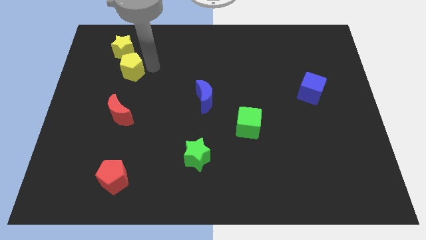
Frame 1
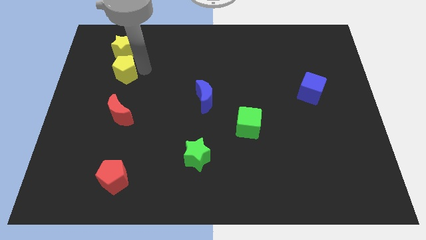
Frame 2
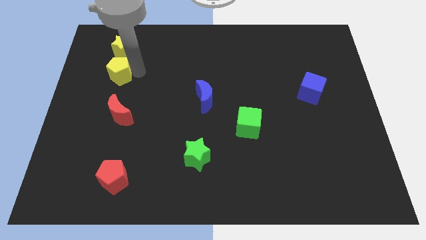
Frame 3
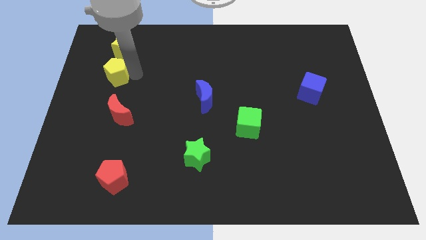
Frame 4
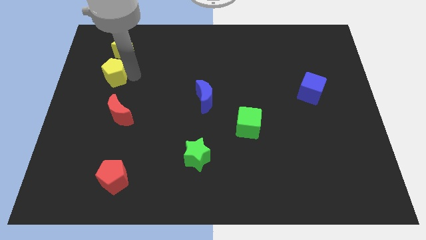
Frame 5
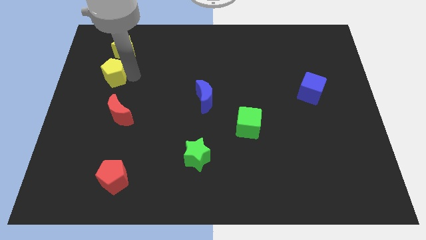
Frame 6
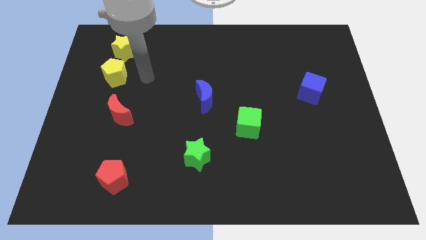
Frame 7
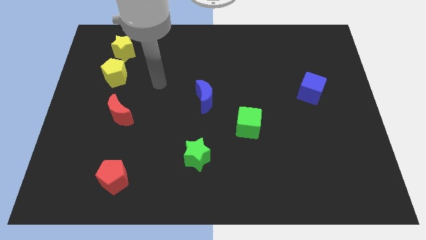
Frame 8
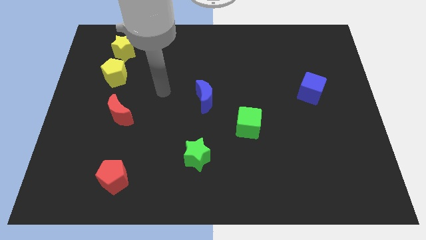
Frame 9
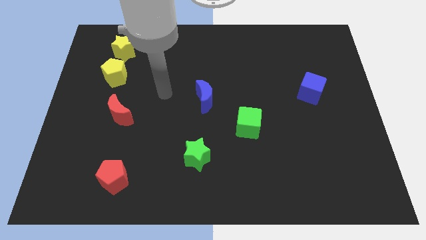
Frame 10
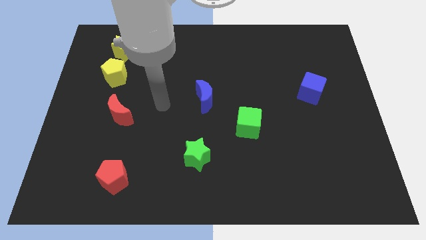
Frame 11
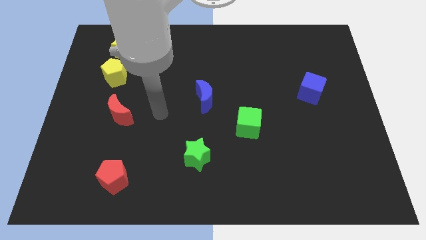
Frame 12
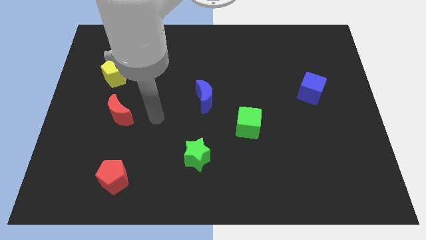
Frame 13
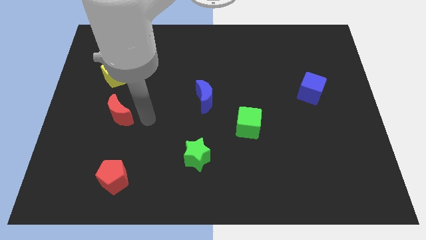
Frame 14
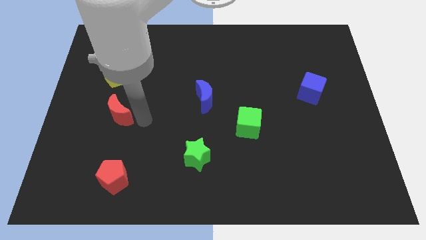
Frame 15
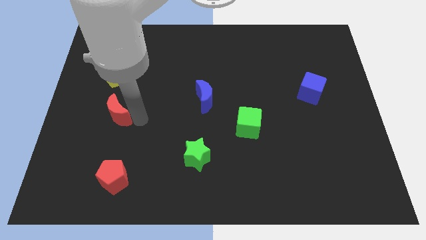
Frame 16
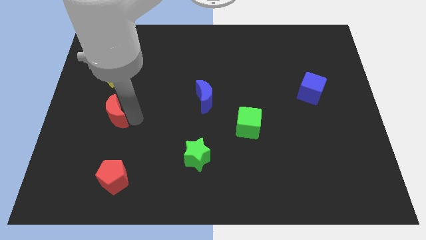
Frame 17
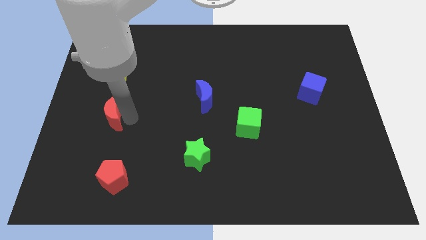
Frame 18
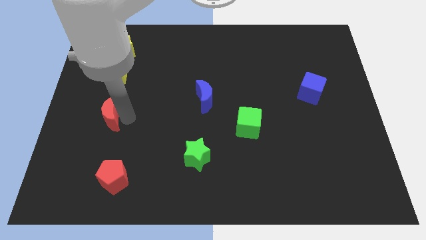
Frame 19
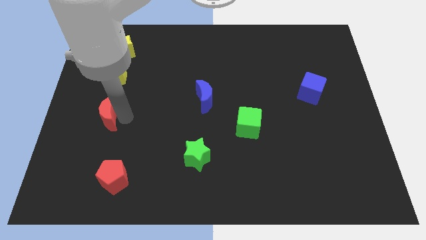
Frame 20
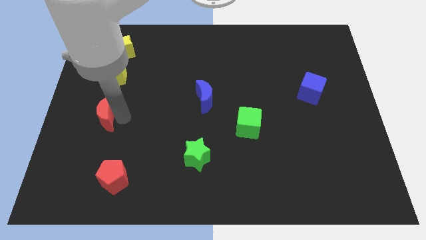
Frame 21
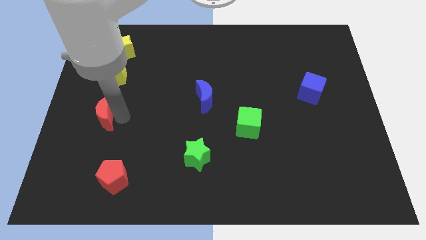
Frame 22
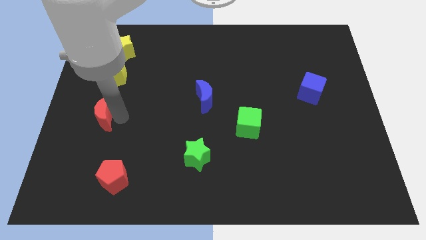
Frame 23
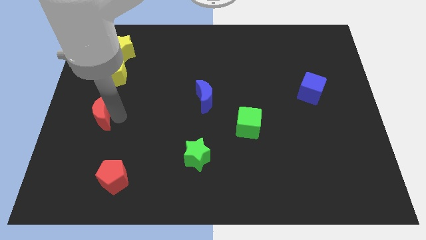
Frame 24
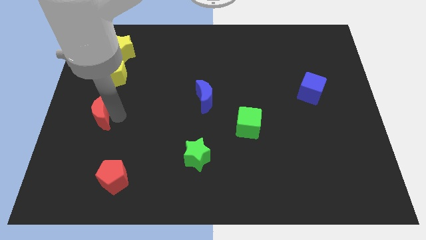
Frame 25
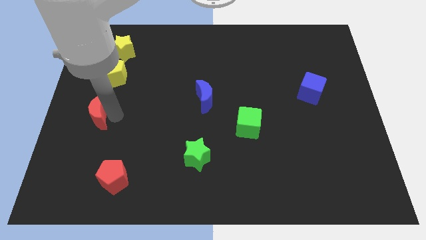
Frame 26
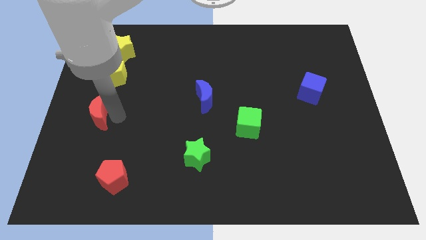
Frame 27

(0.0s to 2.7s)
adjust the yellow pentagon and red moon below the yellow star in a line

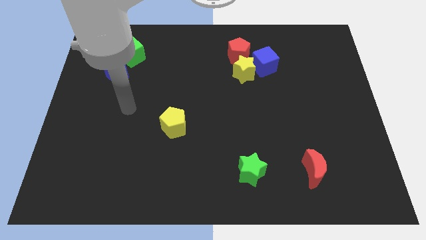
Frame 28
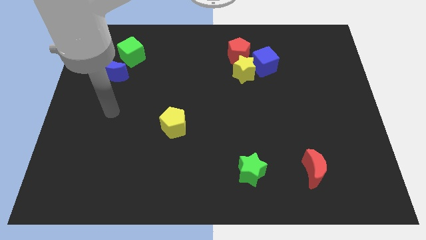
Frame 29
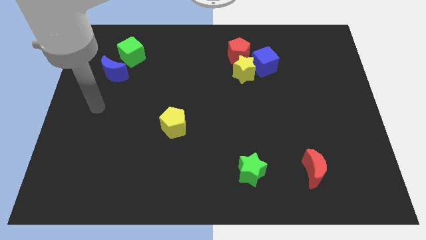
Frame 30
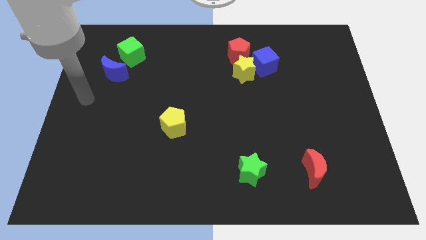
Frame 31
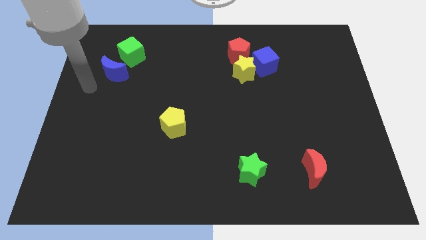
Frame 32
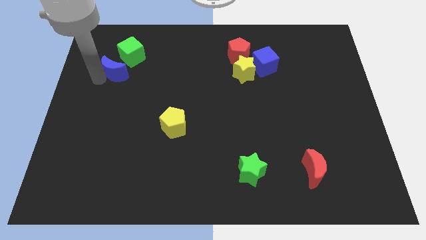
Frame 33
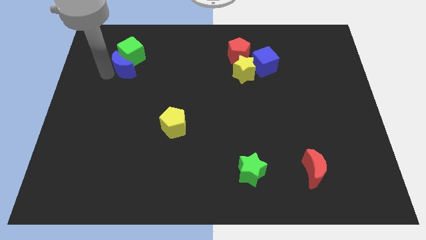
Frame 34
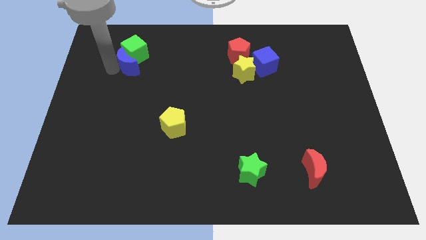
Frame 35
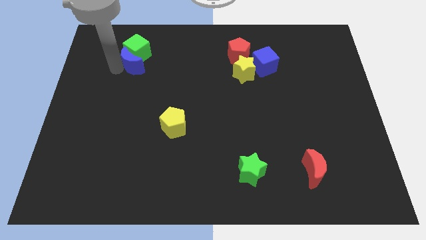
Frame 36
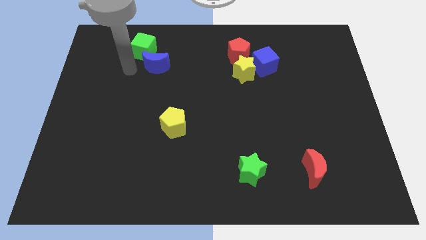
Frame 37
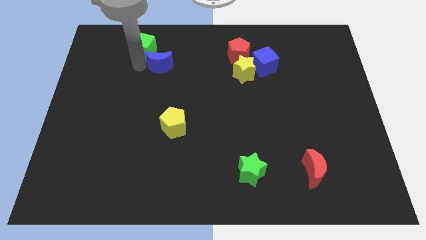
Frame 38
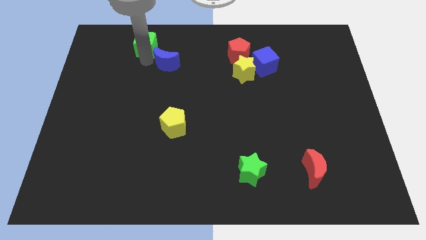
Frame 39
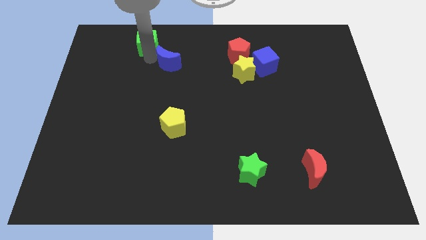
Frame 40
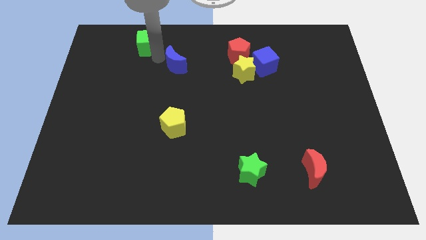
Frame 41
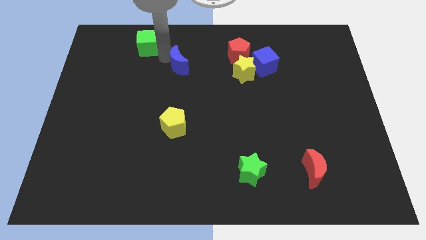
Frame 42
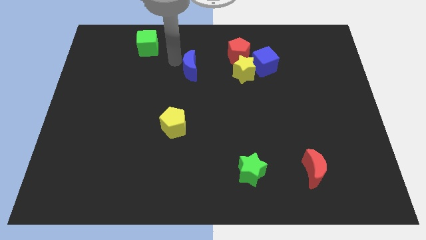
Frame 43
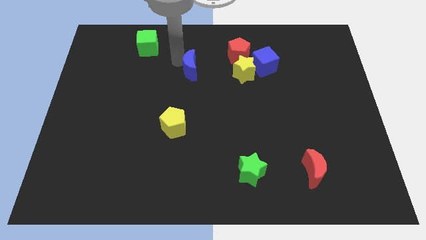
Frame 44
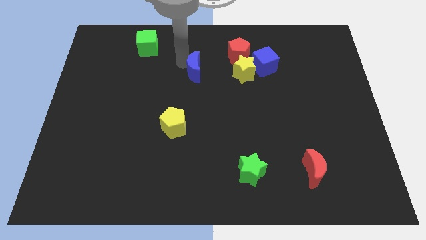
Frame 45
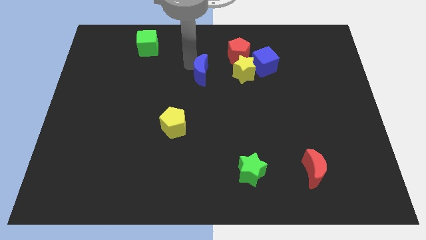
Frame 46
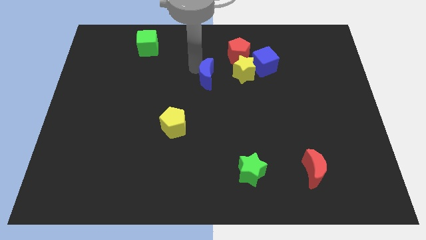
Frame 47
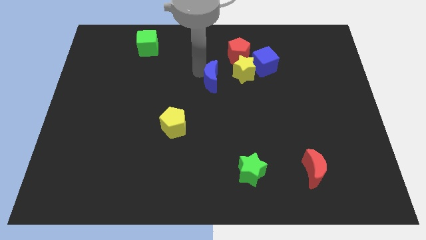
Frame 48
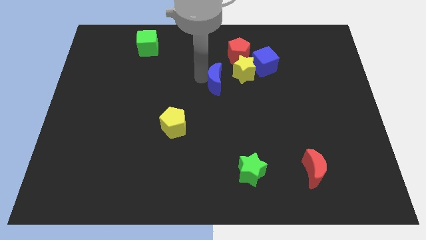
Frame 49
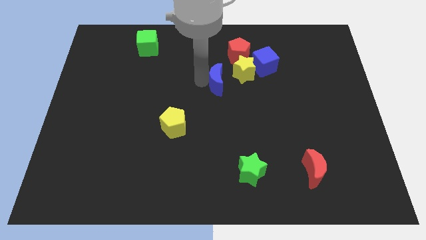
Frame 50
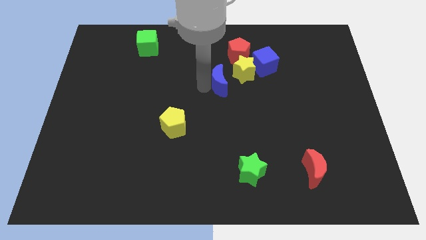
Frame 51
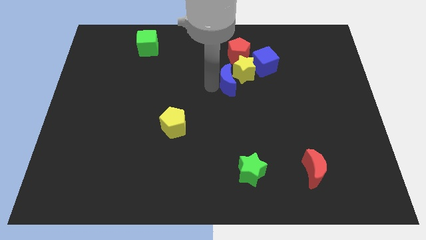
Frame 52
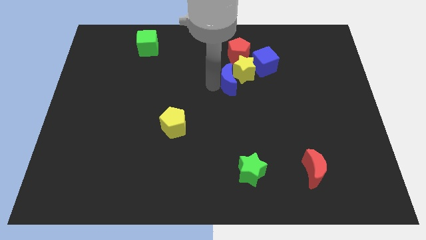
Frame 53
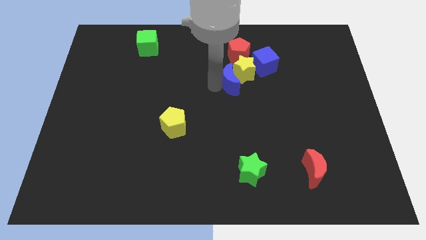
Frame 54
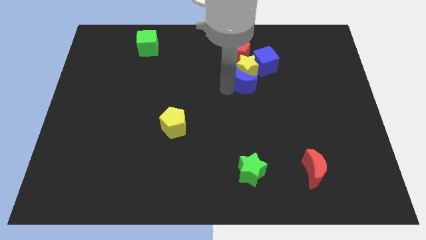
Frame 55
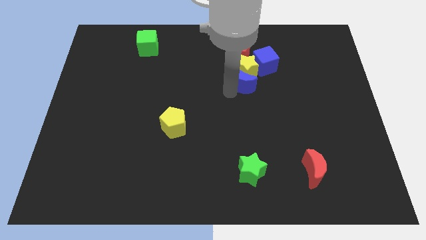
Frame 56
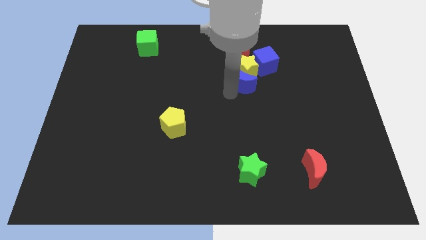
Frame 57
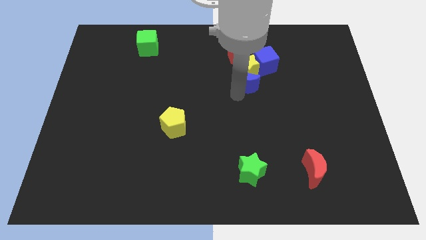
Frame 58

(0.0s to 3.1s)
separate blue moon from green cube

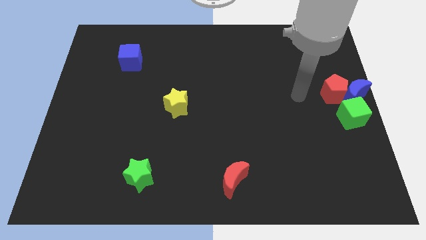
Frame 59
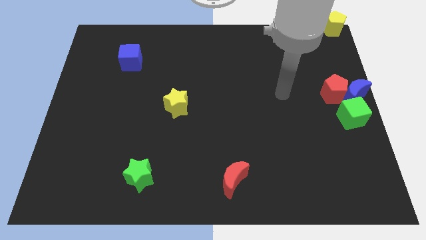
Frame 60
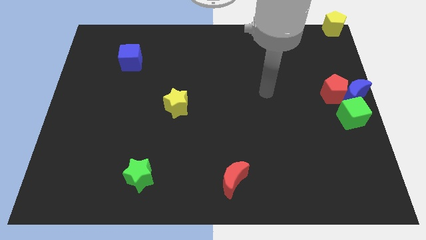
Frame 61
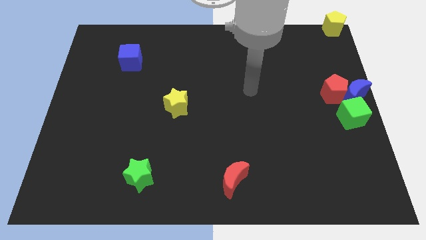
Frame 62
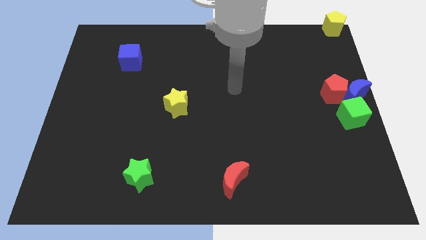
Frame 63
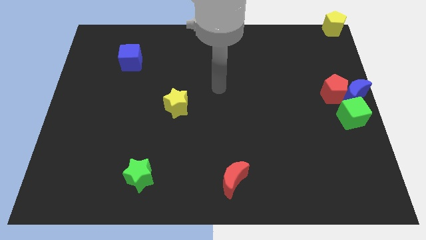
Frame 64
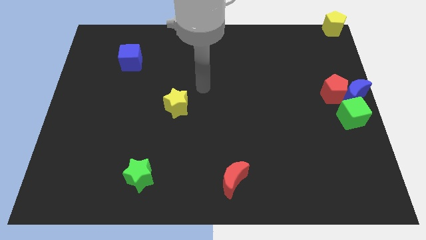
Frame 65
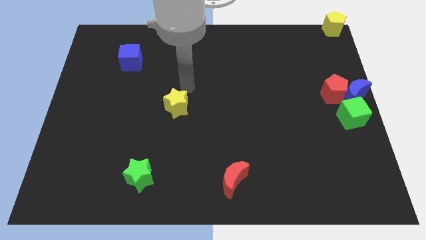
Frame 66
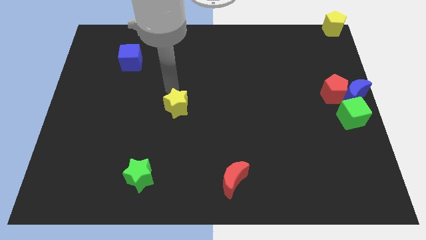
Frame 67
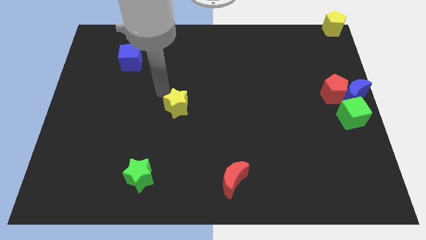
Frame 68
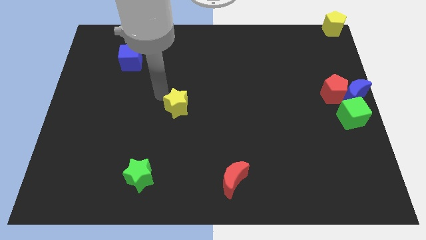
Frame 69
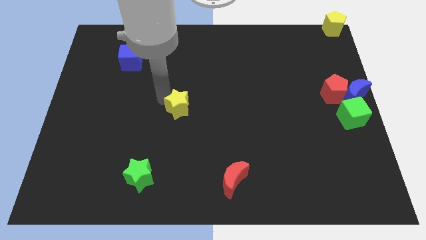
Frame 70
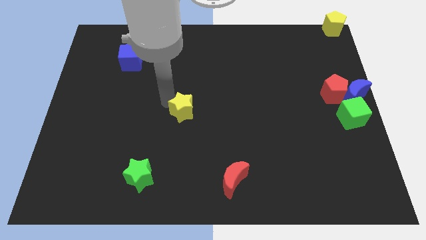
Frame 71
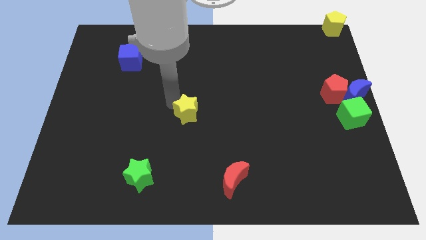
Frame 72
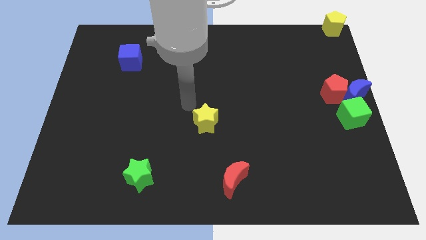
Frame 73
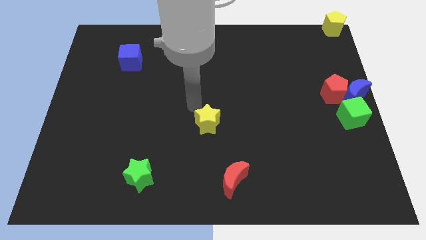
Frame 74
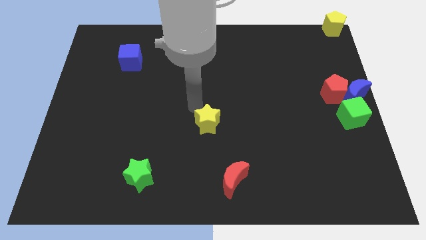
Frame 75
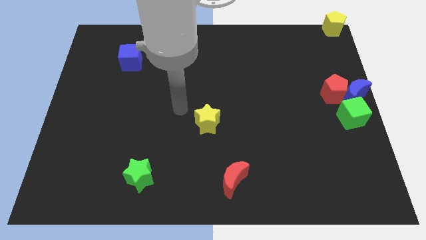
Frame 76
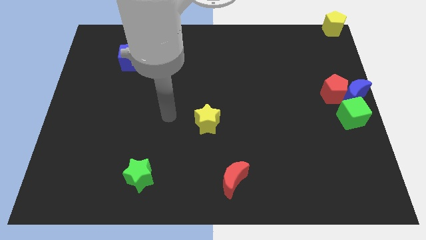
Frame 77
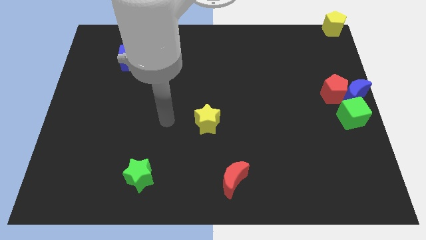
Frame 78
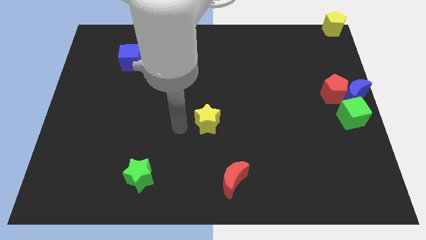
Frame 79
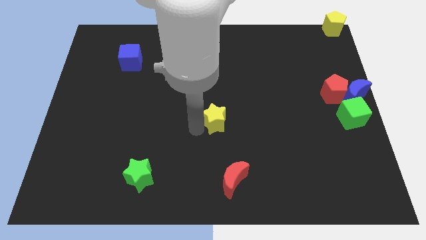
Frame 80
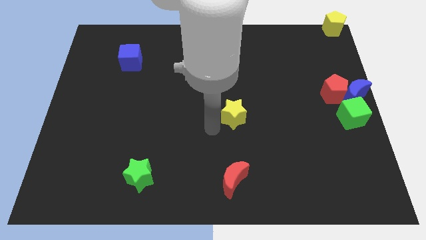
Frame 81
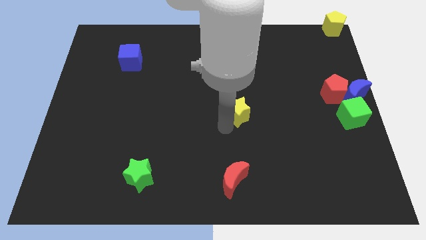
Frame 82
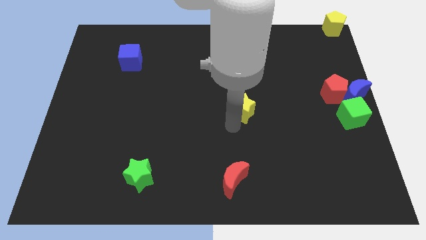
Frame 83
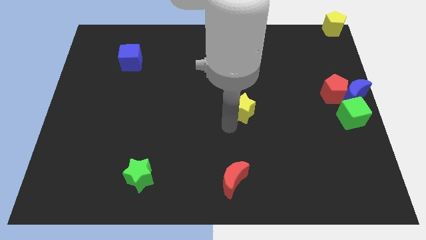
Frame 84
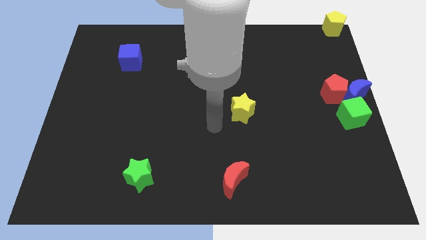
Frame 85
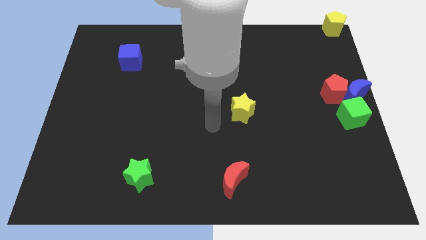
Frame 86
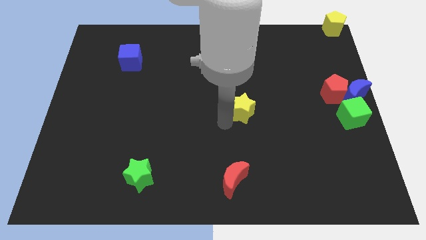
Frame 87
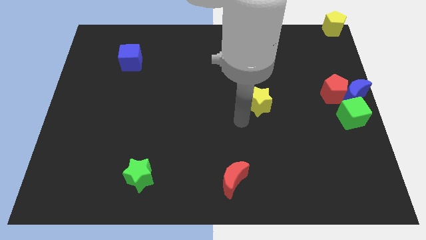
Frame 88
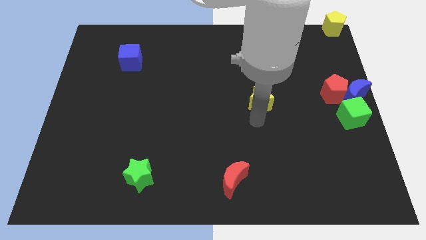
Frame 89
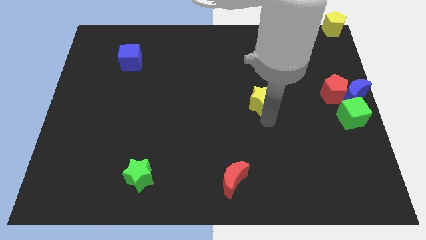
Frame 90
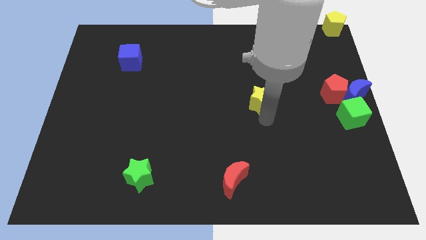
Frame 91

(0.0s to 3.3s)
place the yellow star diagonally top right to the red moon
